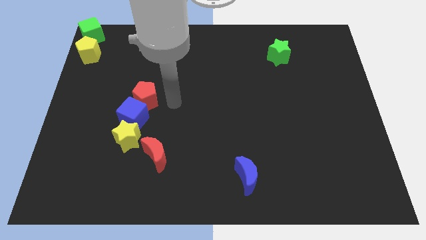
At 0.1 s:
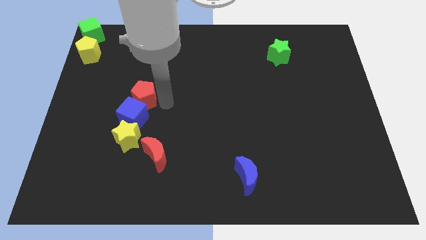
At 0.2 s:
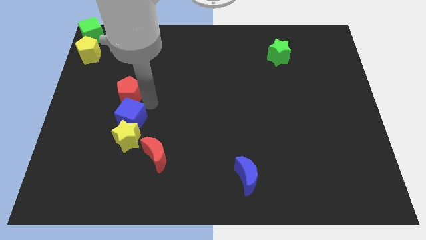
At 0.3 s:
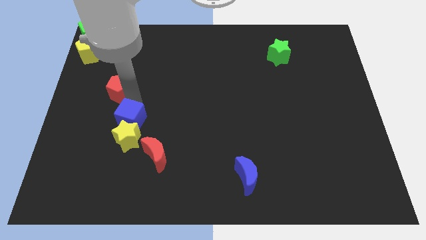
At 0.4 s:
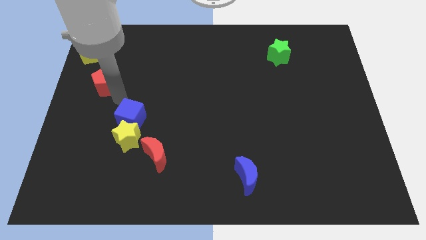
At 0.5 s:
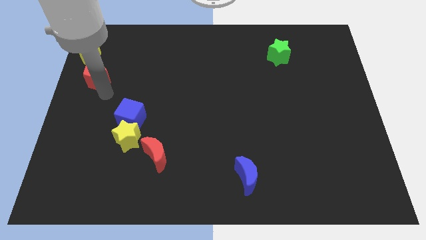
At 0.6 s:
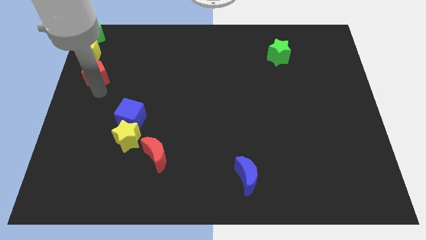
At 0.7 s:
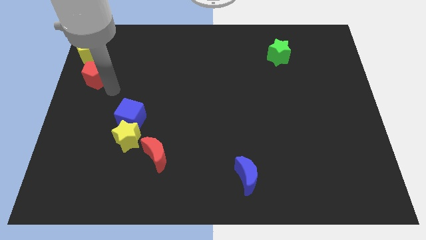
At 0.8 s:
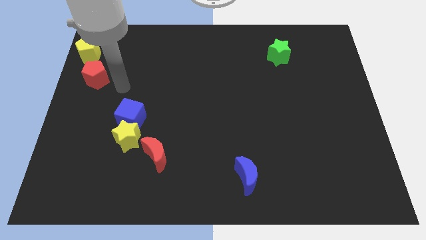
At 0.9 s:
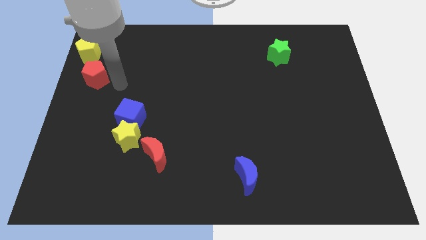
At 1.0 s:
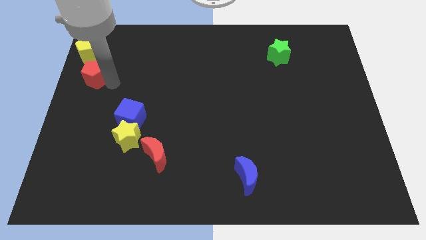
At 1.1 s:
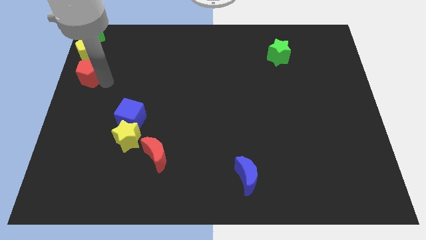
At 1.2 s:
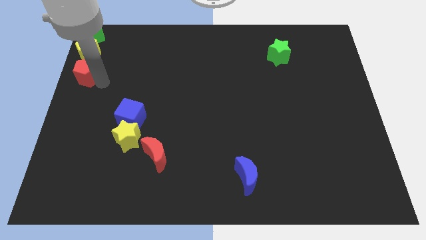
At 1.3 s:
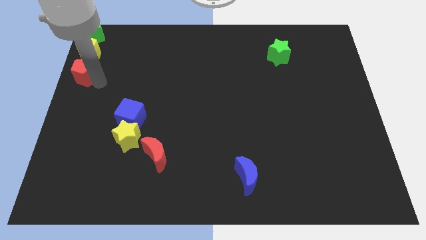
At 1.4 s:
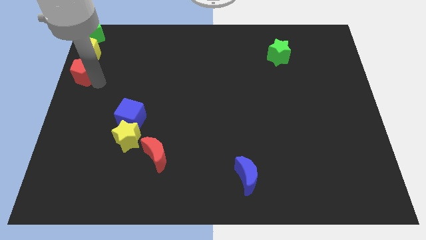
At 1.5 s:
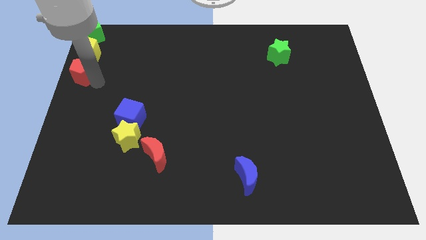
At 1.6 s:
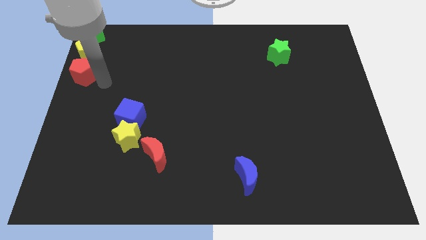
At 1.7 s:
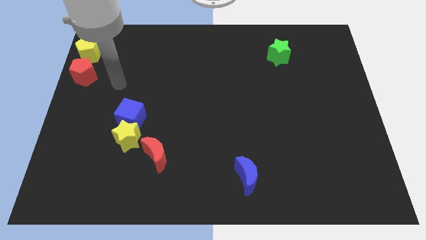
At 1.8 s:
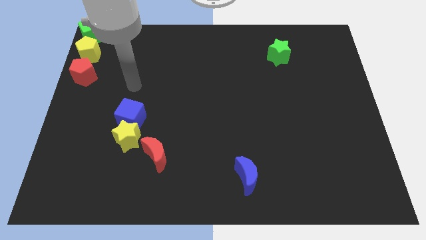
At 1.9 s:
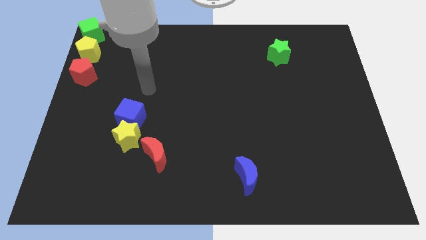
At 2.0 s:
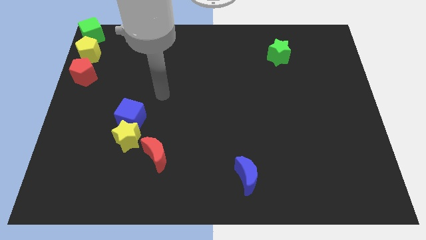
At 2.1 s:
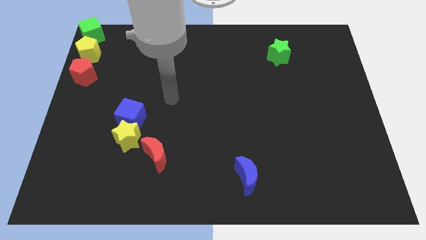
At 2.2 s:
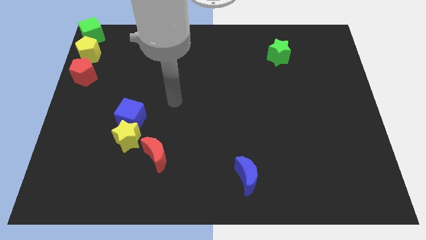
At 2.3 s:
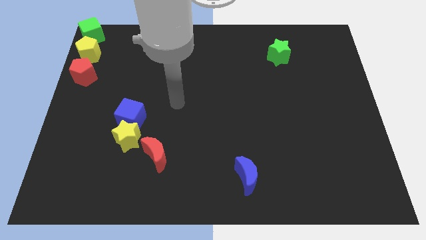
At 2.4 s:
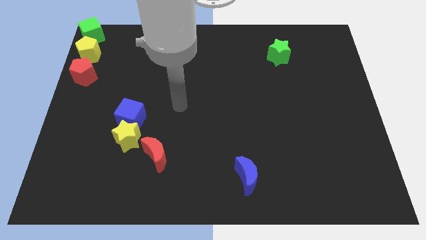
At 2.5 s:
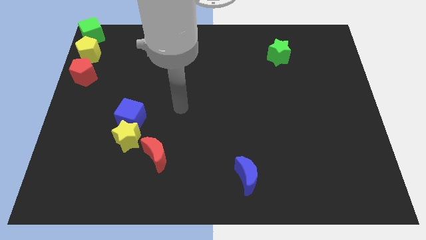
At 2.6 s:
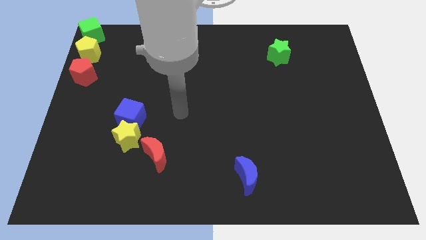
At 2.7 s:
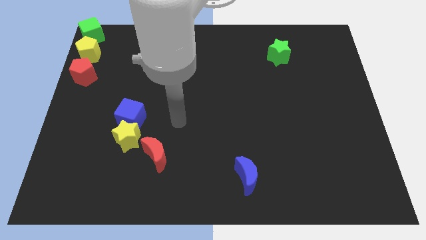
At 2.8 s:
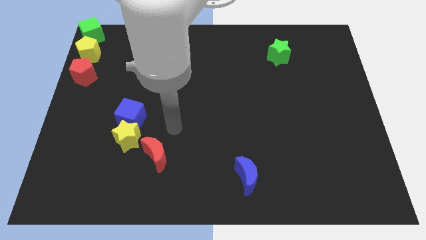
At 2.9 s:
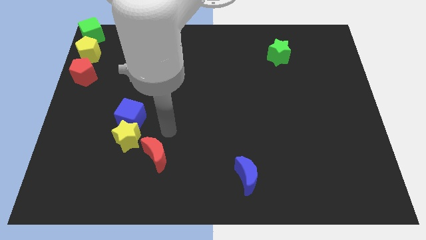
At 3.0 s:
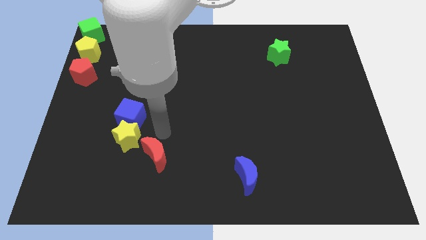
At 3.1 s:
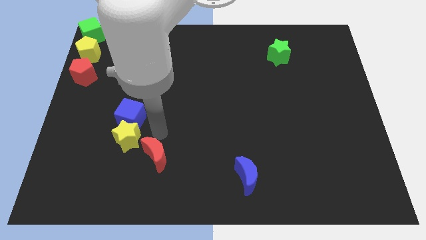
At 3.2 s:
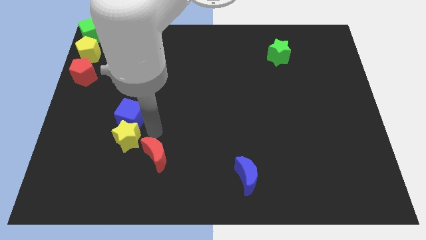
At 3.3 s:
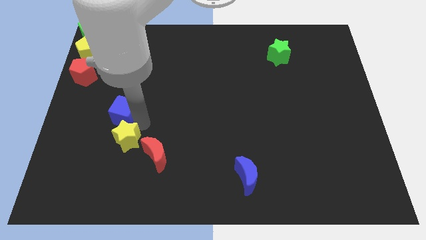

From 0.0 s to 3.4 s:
place red pentagon below yellow pentagon

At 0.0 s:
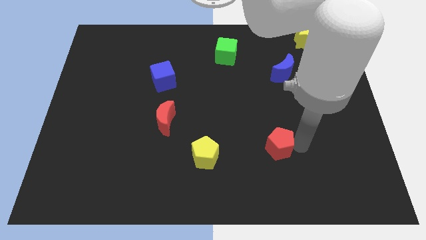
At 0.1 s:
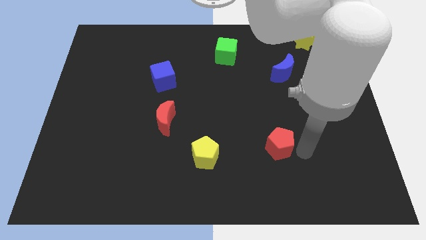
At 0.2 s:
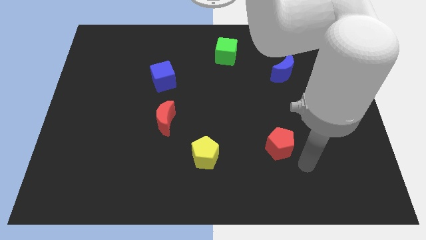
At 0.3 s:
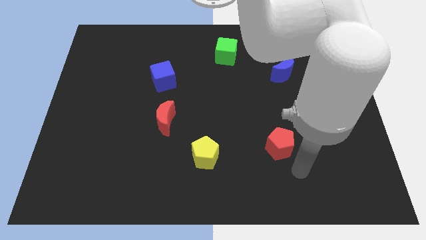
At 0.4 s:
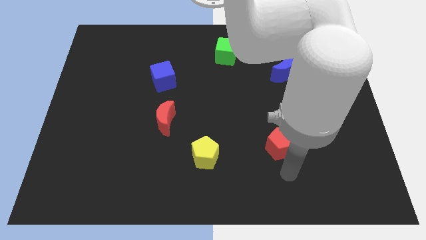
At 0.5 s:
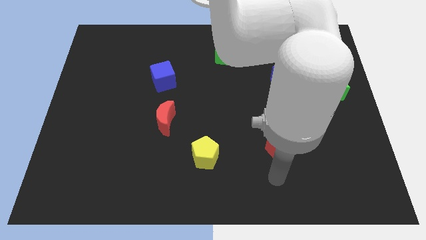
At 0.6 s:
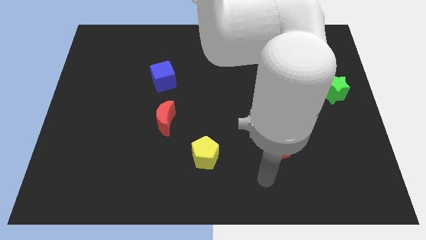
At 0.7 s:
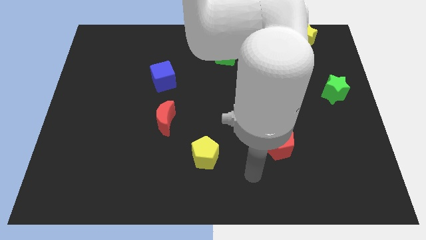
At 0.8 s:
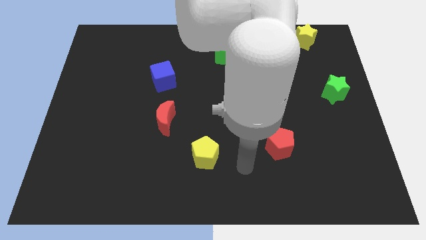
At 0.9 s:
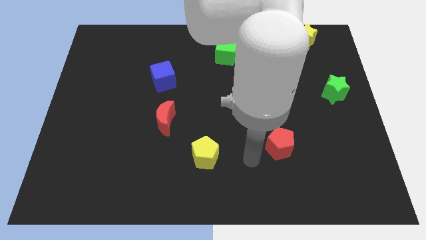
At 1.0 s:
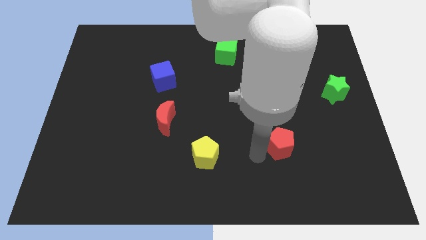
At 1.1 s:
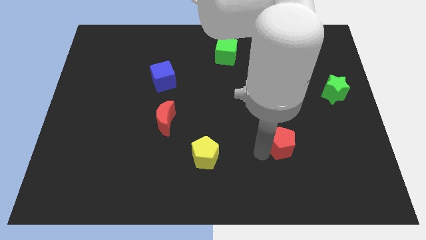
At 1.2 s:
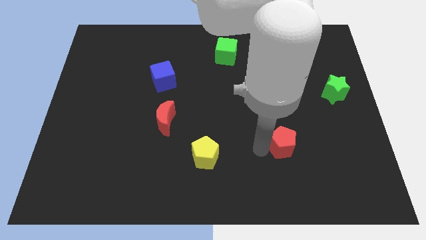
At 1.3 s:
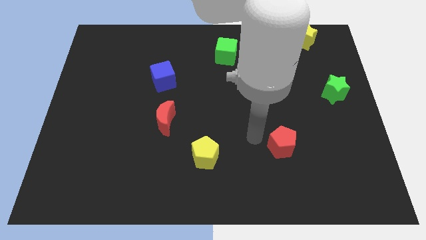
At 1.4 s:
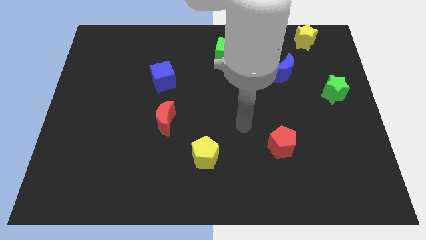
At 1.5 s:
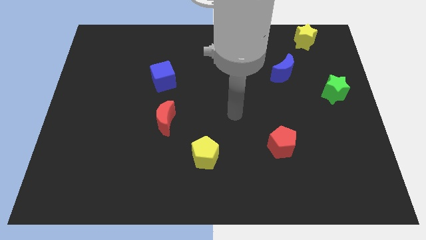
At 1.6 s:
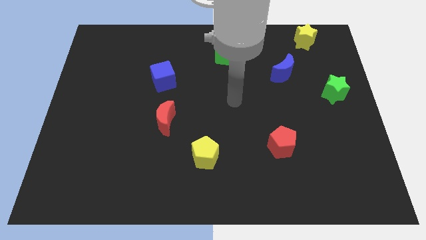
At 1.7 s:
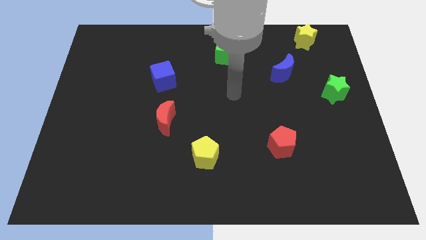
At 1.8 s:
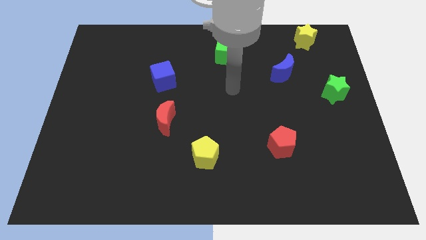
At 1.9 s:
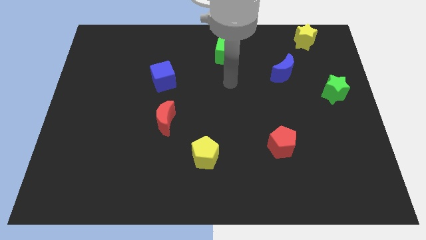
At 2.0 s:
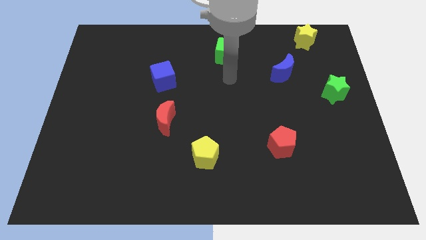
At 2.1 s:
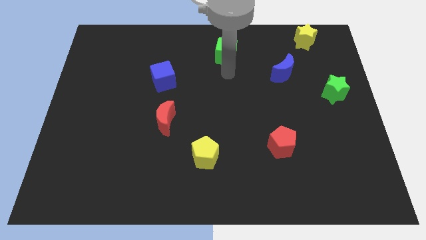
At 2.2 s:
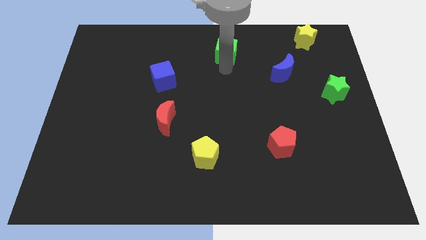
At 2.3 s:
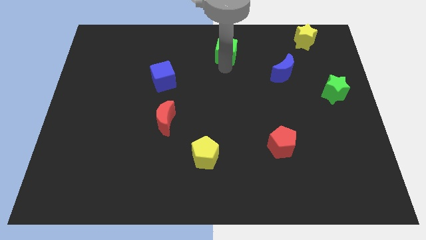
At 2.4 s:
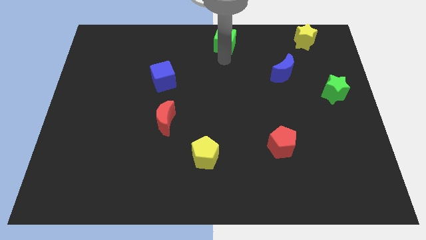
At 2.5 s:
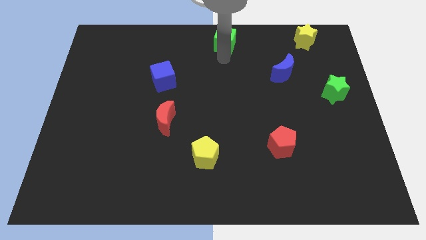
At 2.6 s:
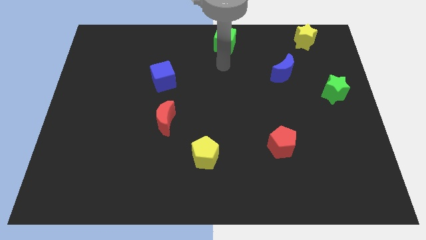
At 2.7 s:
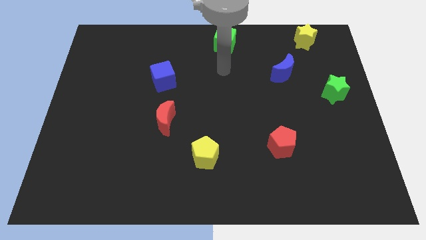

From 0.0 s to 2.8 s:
push the green cube towards the top center side

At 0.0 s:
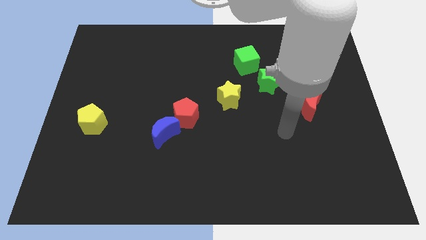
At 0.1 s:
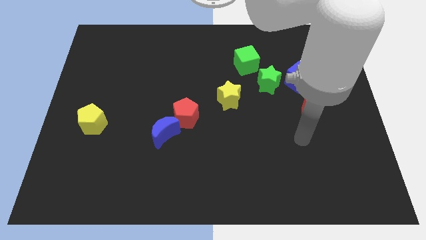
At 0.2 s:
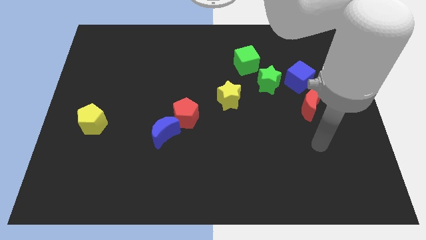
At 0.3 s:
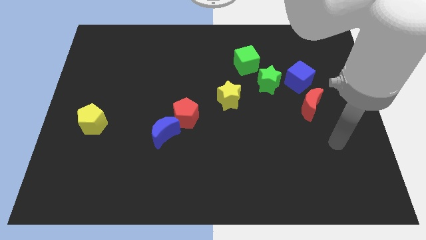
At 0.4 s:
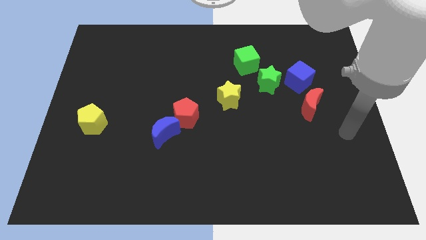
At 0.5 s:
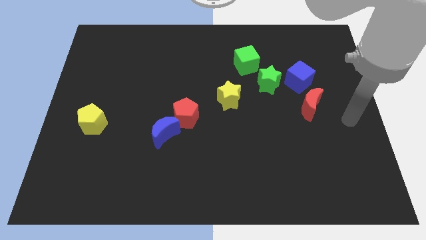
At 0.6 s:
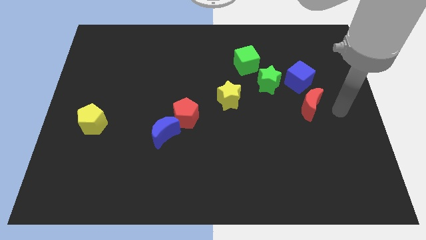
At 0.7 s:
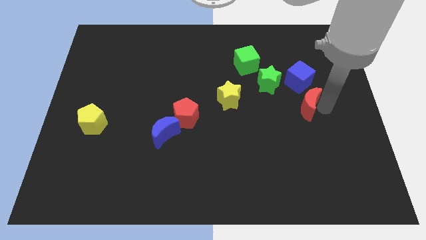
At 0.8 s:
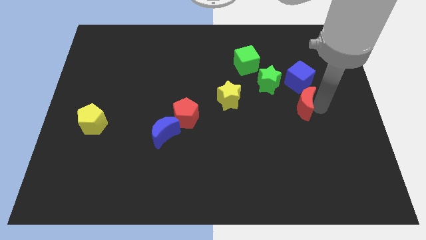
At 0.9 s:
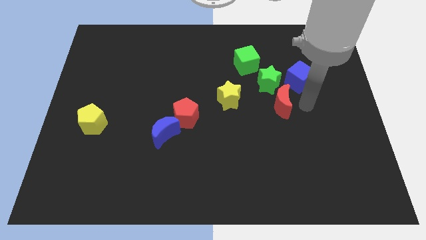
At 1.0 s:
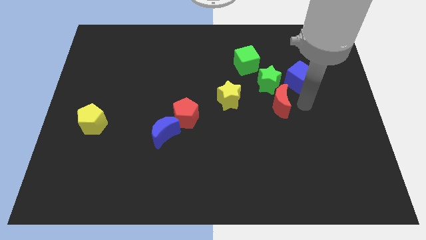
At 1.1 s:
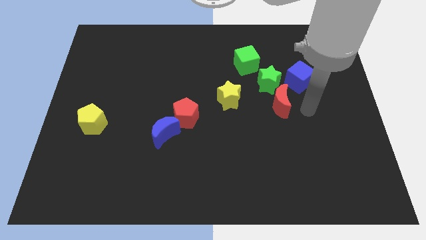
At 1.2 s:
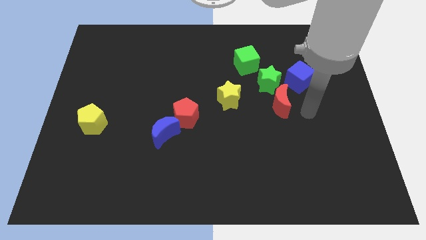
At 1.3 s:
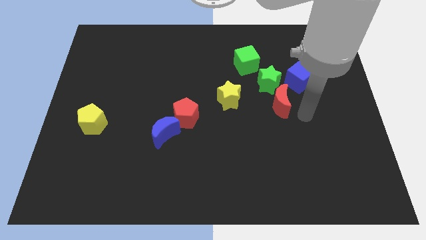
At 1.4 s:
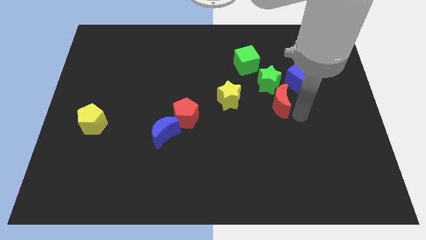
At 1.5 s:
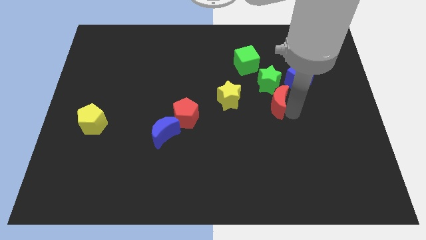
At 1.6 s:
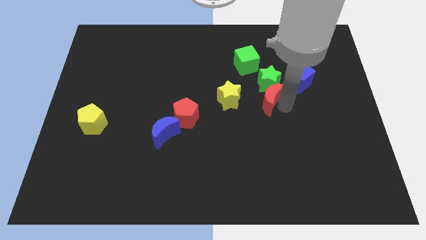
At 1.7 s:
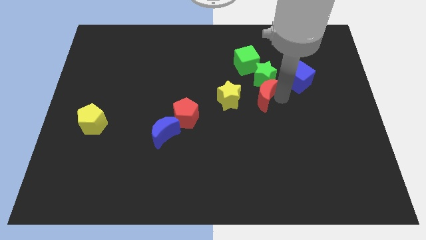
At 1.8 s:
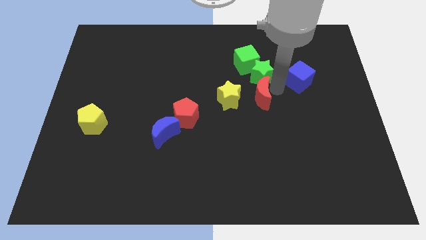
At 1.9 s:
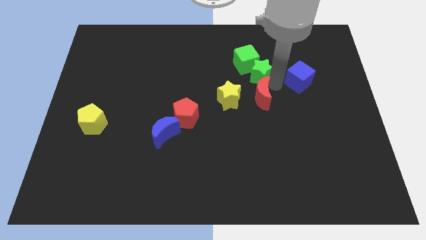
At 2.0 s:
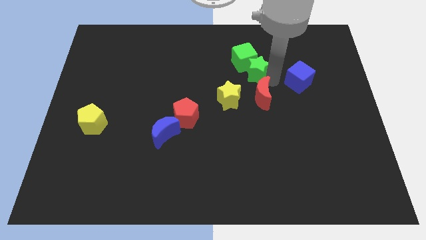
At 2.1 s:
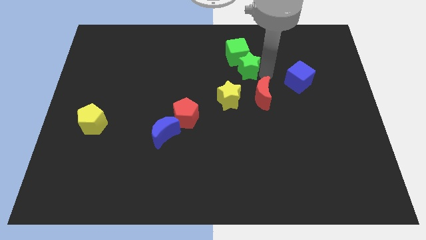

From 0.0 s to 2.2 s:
move red moon into green star

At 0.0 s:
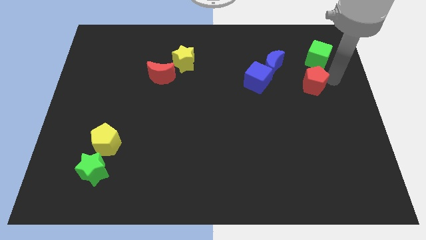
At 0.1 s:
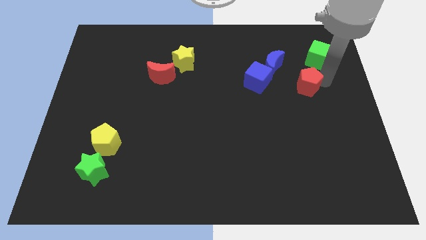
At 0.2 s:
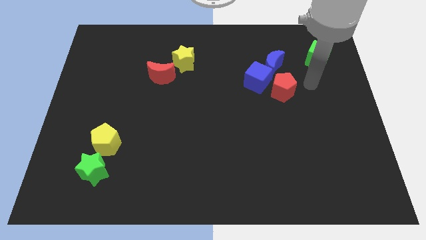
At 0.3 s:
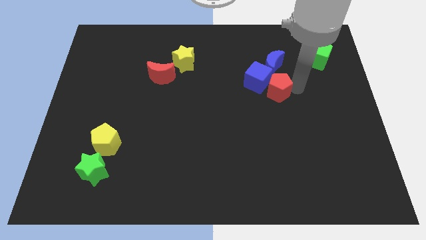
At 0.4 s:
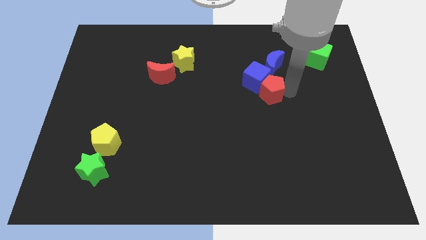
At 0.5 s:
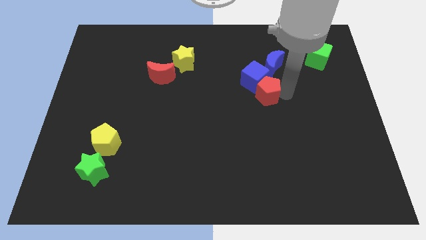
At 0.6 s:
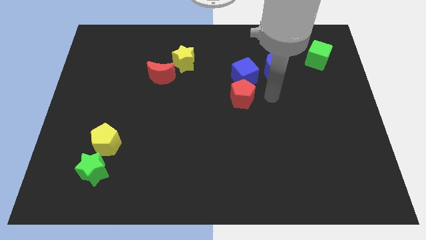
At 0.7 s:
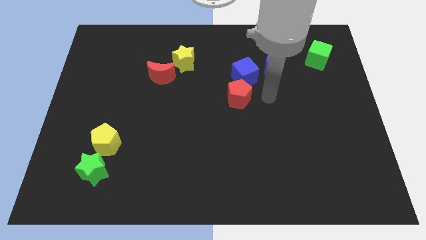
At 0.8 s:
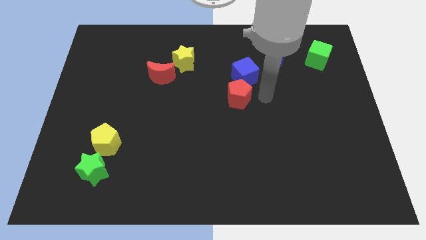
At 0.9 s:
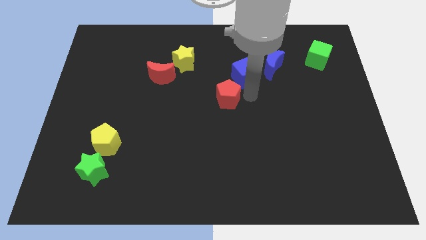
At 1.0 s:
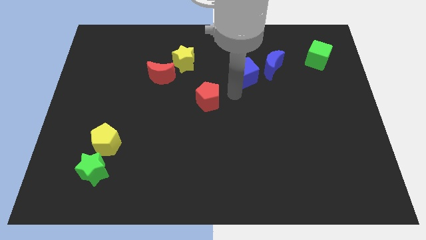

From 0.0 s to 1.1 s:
push red pentagon towards center
